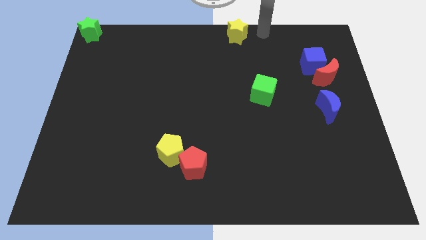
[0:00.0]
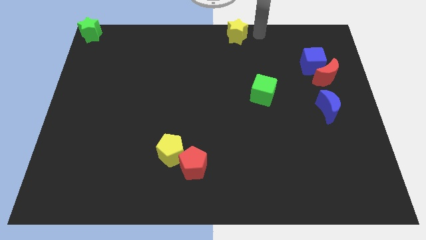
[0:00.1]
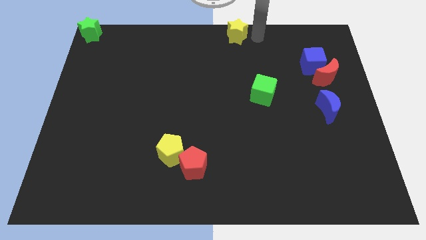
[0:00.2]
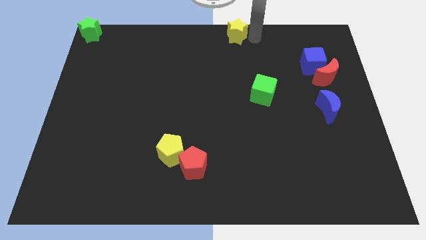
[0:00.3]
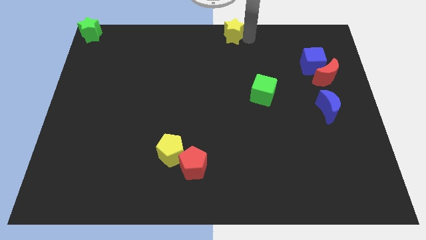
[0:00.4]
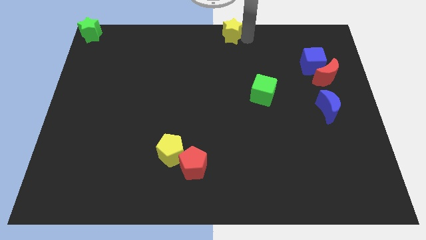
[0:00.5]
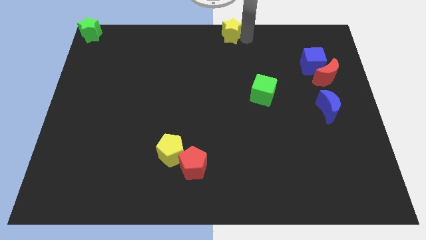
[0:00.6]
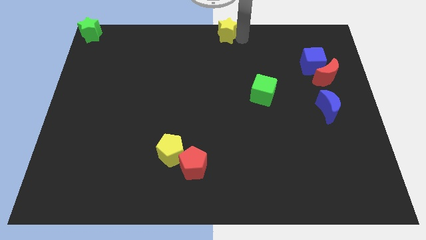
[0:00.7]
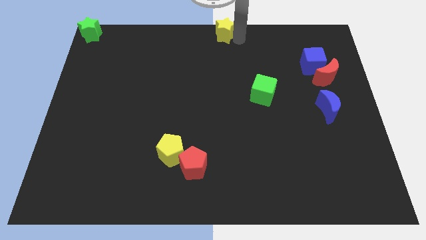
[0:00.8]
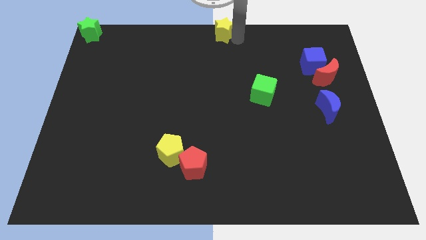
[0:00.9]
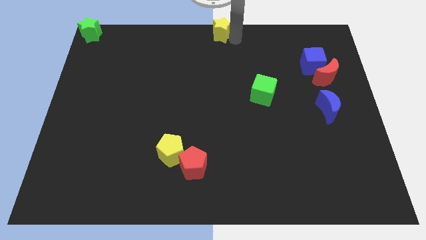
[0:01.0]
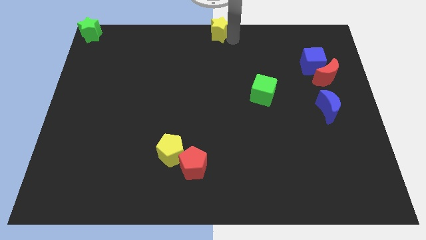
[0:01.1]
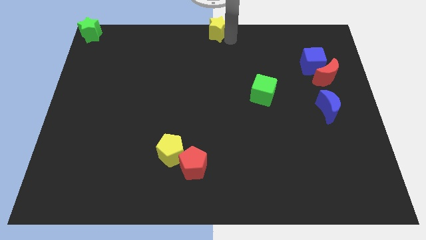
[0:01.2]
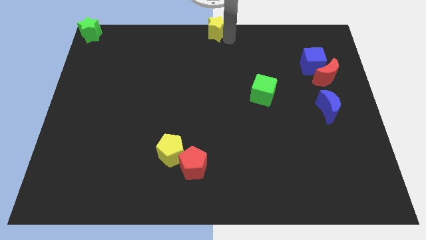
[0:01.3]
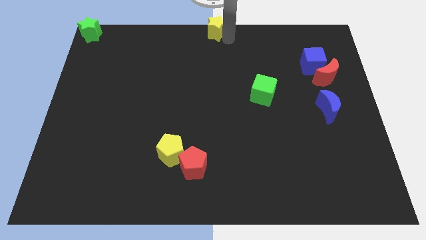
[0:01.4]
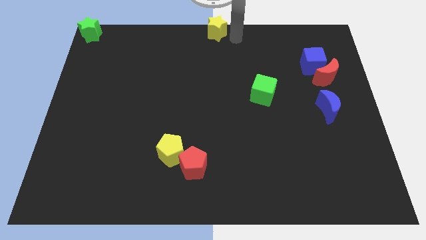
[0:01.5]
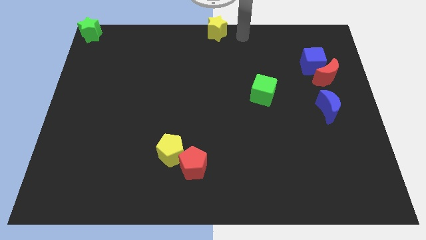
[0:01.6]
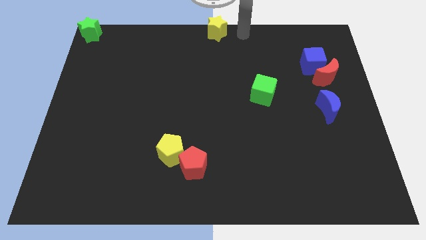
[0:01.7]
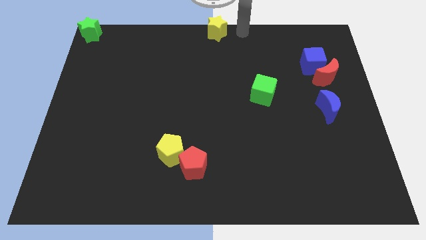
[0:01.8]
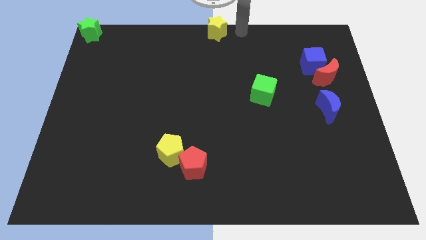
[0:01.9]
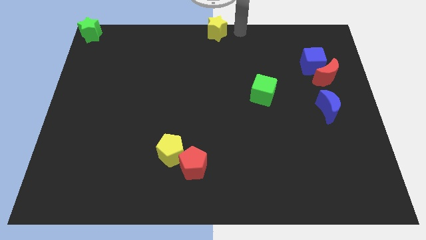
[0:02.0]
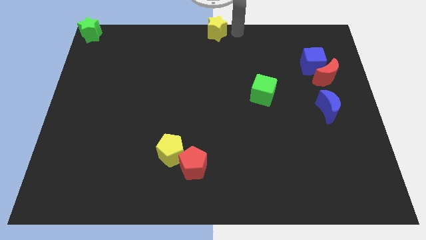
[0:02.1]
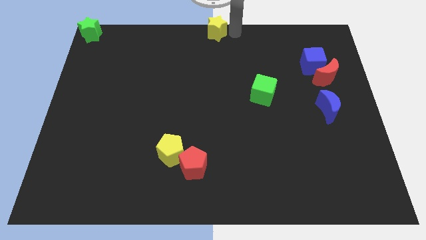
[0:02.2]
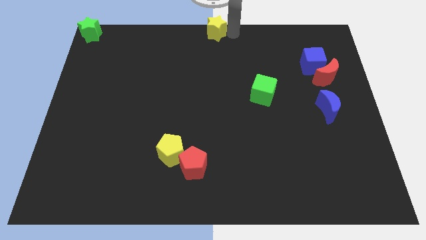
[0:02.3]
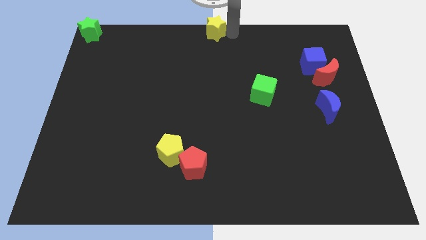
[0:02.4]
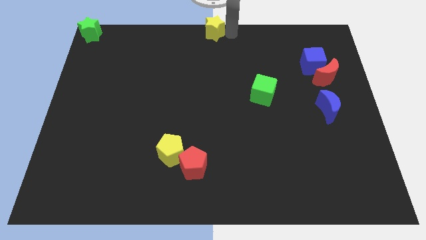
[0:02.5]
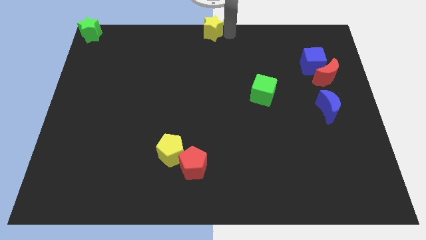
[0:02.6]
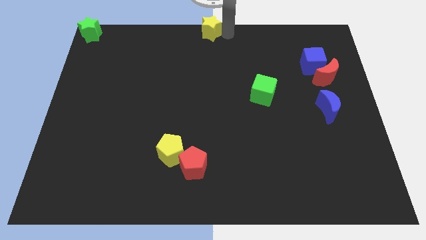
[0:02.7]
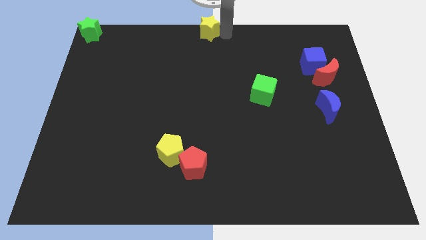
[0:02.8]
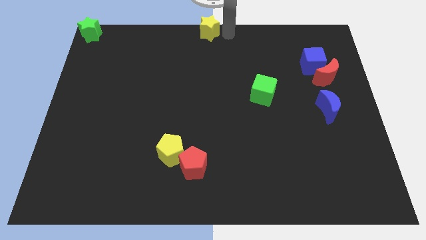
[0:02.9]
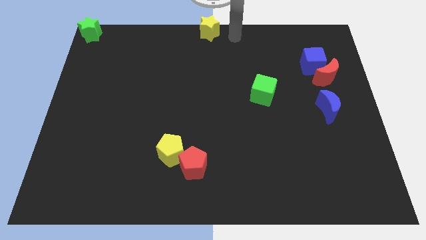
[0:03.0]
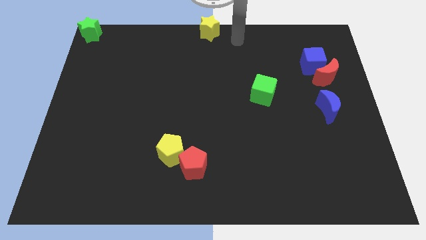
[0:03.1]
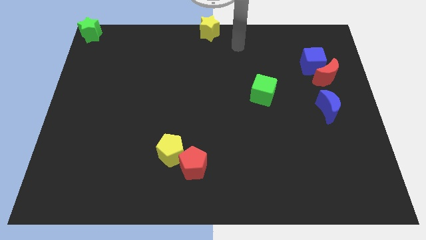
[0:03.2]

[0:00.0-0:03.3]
slightly push yellow star to the center

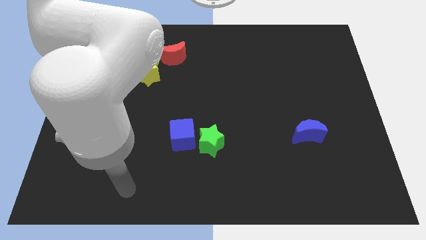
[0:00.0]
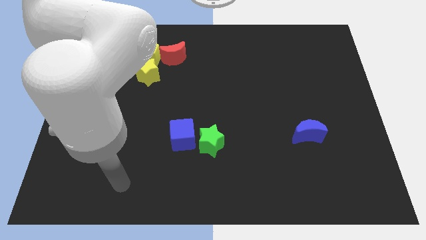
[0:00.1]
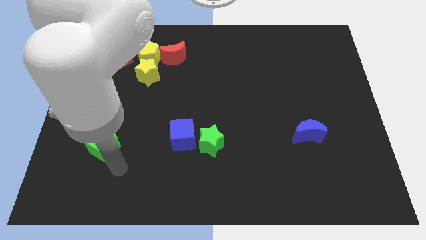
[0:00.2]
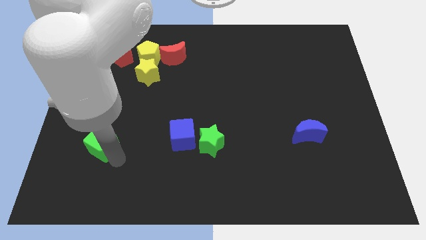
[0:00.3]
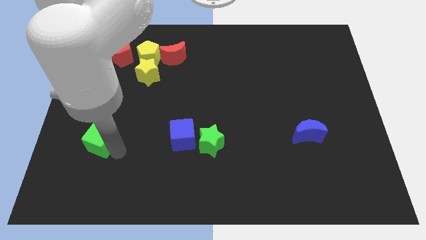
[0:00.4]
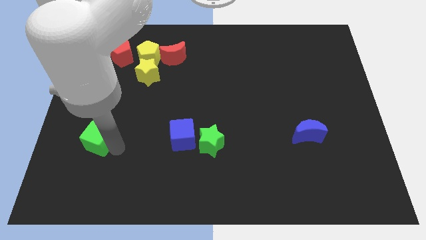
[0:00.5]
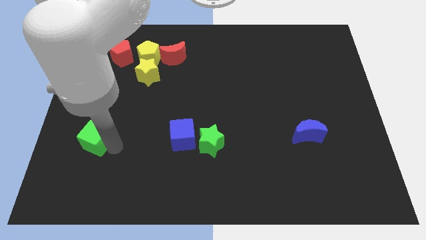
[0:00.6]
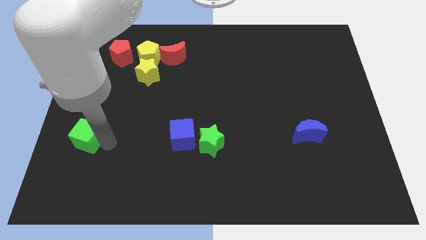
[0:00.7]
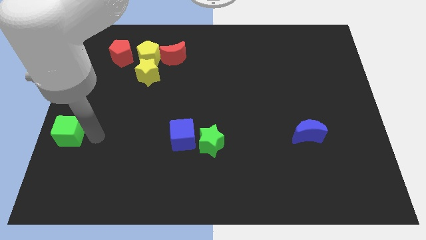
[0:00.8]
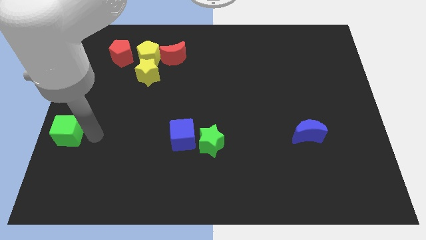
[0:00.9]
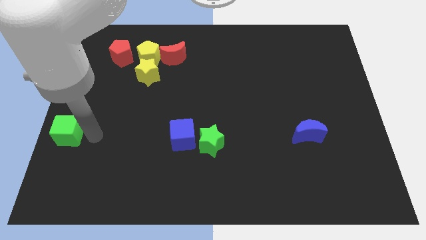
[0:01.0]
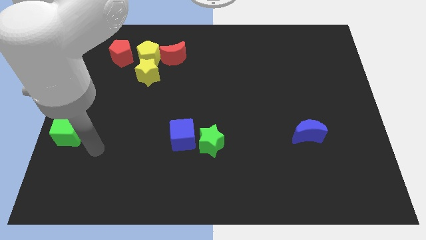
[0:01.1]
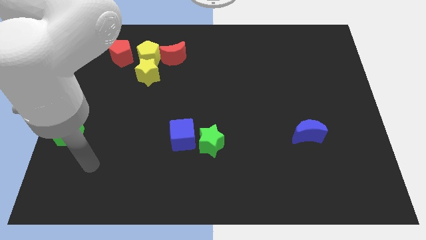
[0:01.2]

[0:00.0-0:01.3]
slide the green cube to the center left side of the board

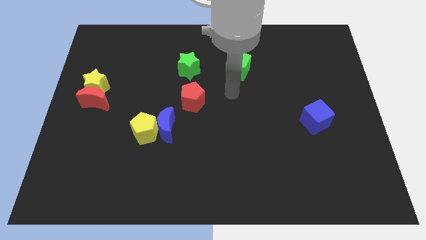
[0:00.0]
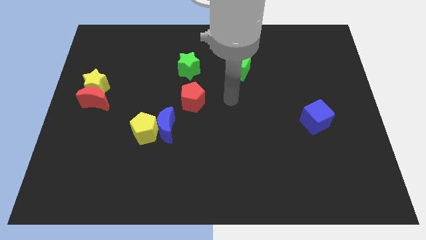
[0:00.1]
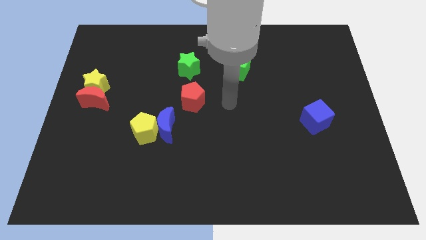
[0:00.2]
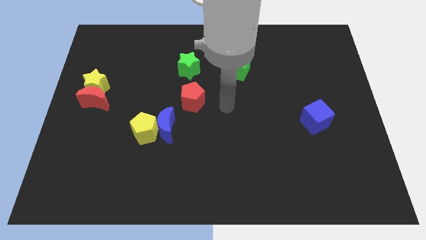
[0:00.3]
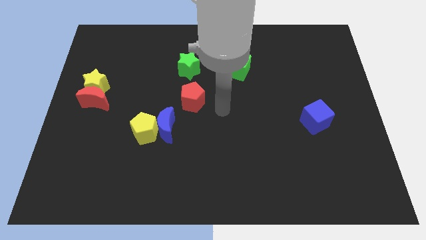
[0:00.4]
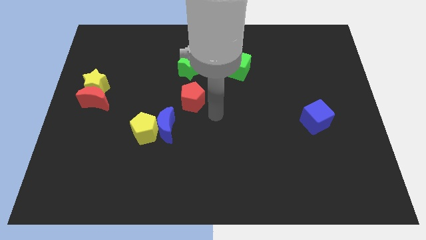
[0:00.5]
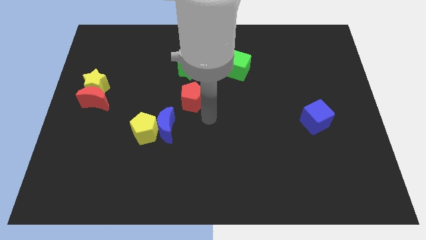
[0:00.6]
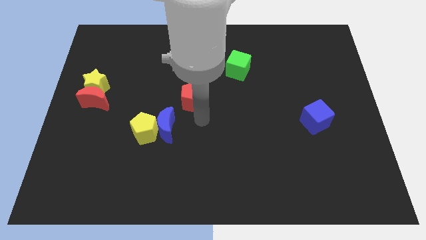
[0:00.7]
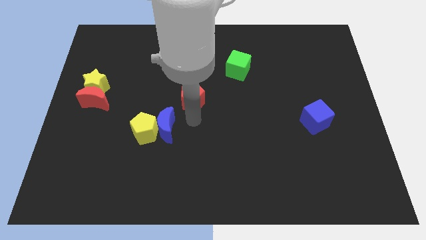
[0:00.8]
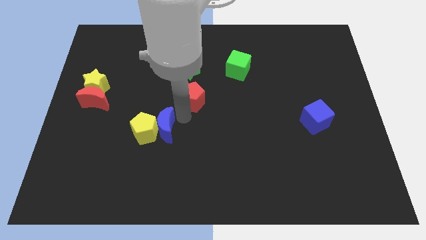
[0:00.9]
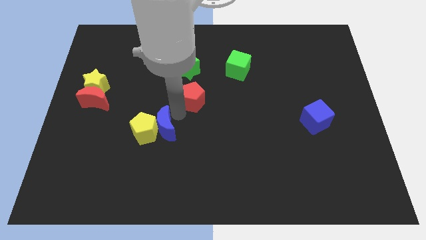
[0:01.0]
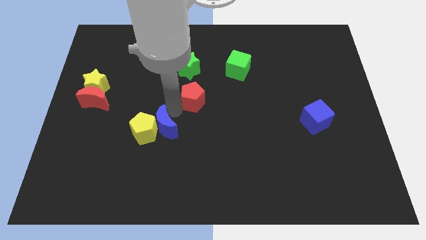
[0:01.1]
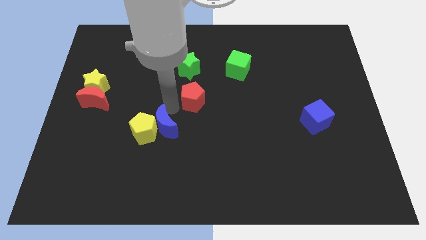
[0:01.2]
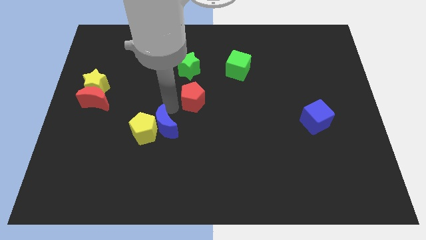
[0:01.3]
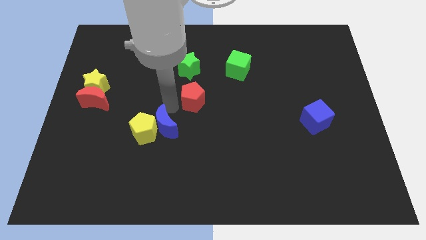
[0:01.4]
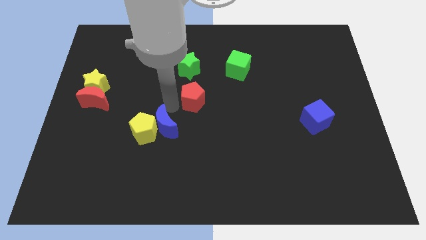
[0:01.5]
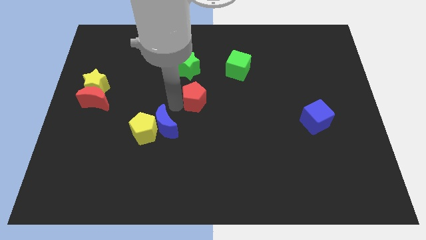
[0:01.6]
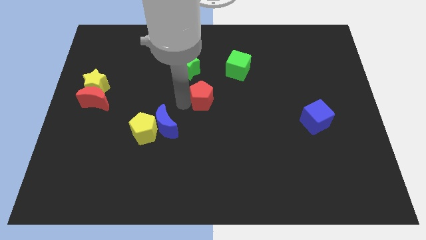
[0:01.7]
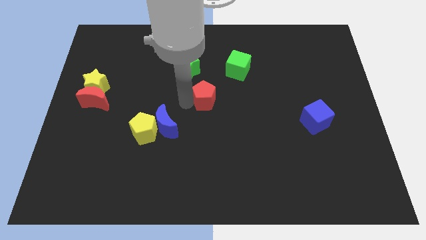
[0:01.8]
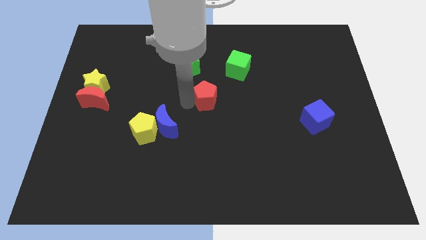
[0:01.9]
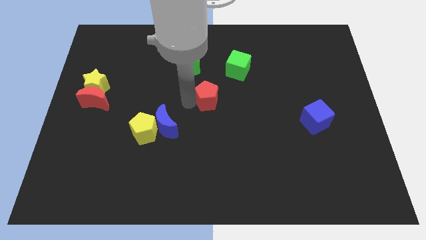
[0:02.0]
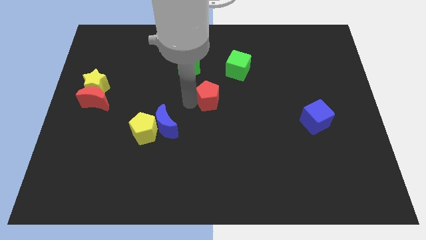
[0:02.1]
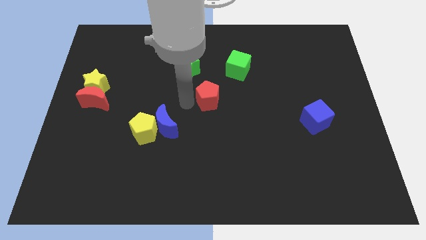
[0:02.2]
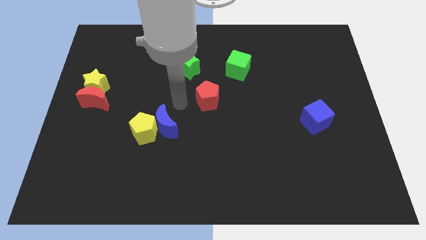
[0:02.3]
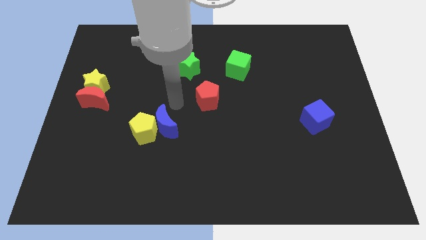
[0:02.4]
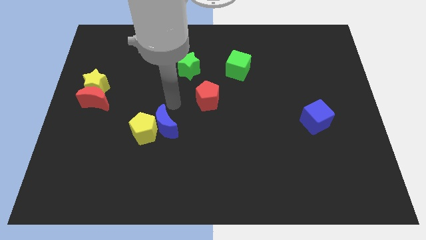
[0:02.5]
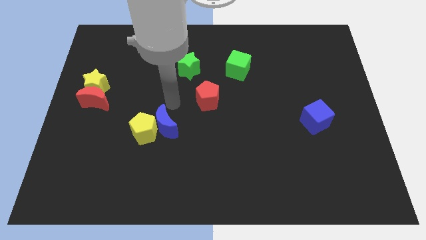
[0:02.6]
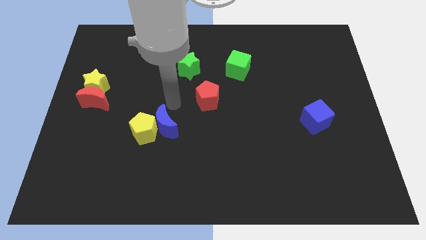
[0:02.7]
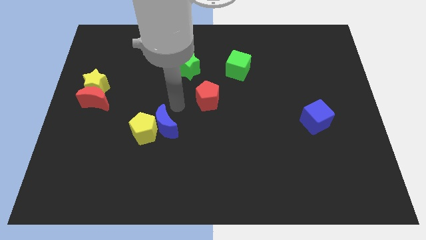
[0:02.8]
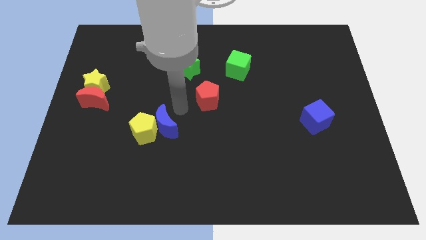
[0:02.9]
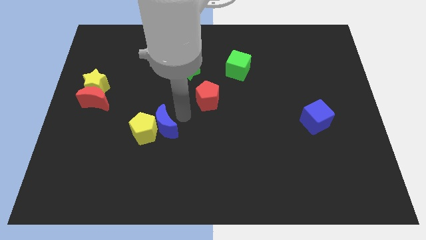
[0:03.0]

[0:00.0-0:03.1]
move the red pentagon slightly to the right

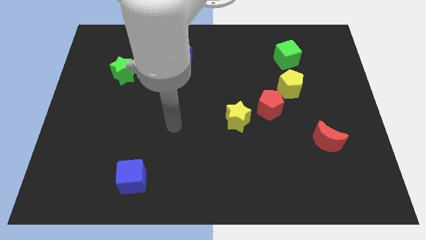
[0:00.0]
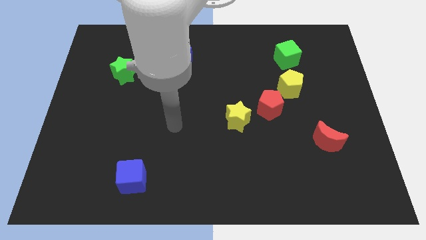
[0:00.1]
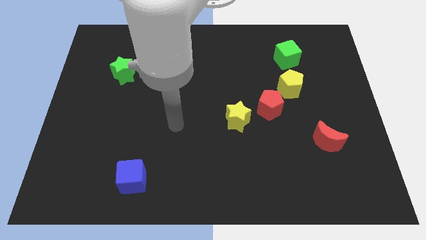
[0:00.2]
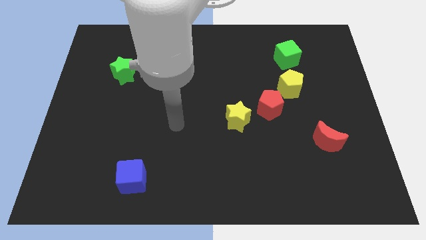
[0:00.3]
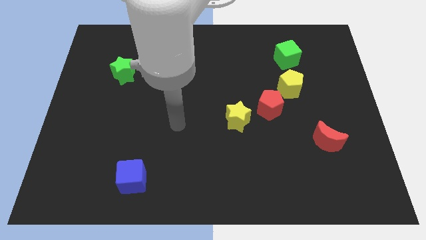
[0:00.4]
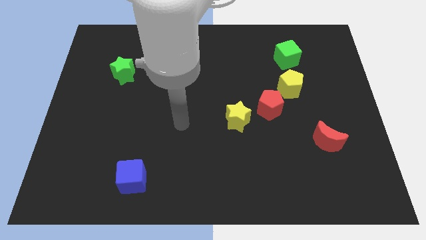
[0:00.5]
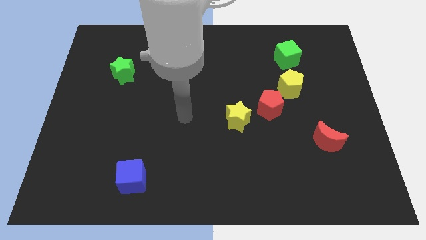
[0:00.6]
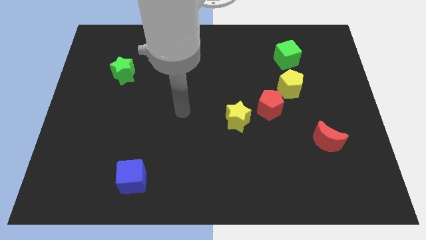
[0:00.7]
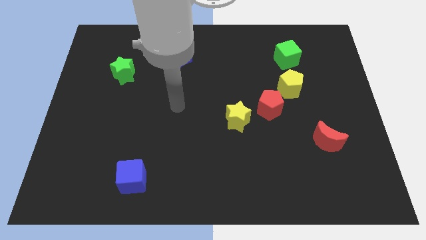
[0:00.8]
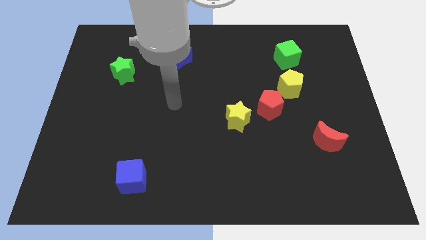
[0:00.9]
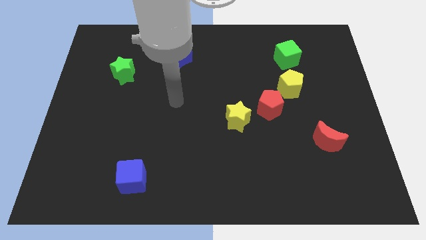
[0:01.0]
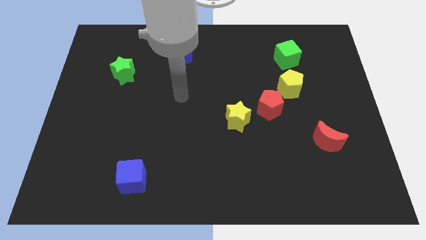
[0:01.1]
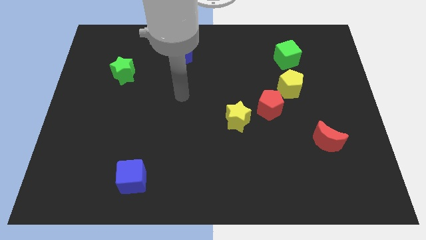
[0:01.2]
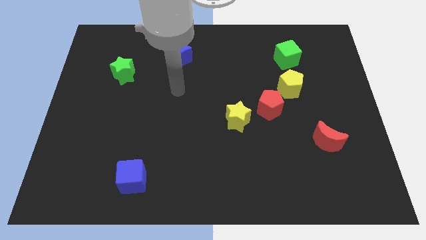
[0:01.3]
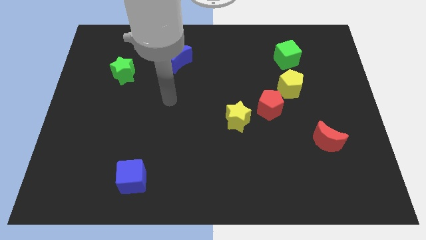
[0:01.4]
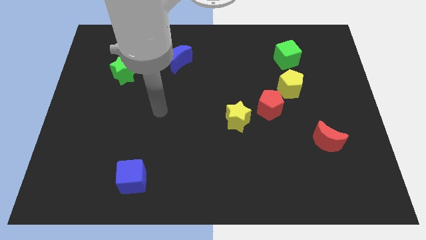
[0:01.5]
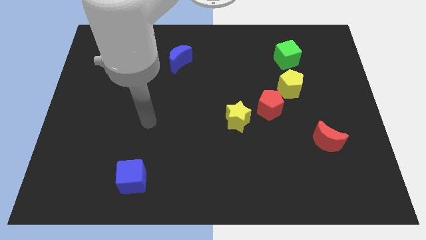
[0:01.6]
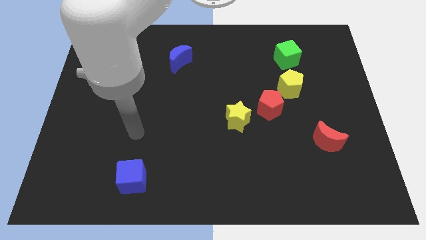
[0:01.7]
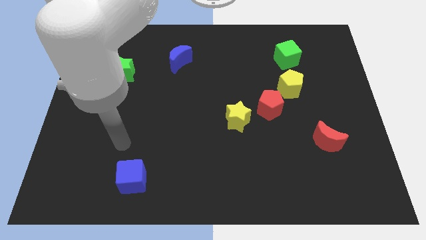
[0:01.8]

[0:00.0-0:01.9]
place your arm above the blue cube
